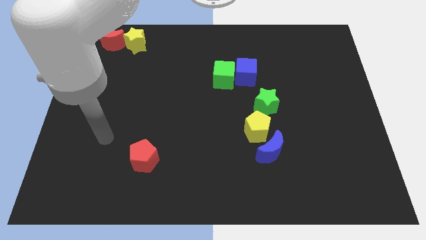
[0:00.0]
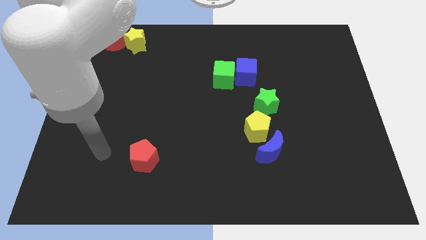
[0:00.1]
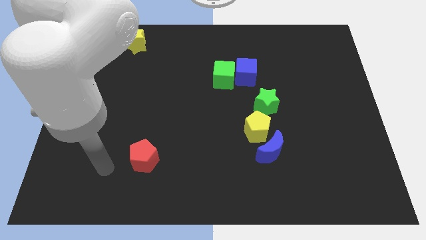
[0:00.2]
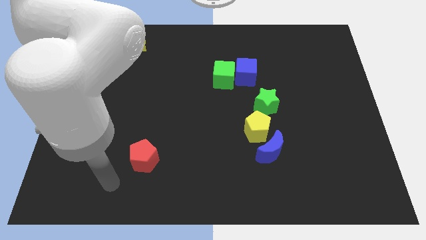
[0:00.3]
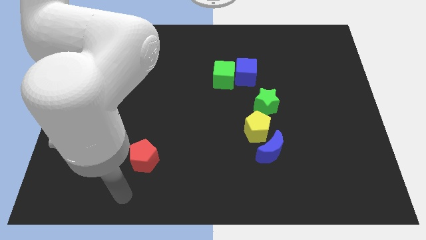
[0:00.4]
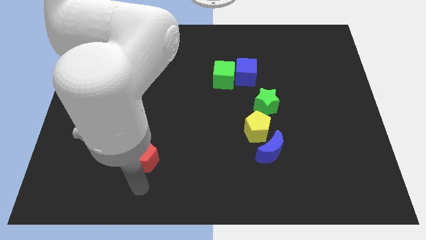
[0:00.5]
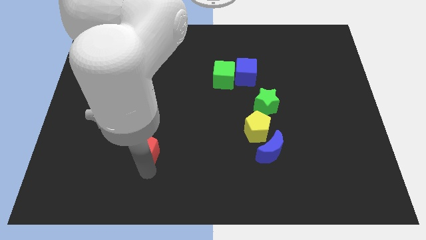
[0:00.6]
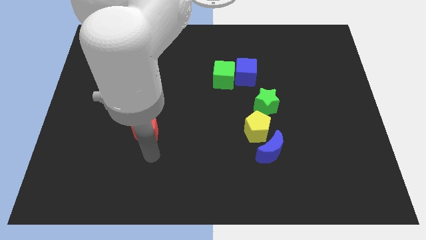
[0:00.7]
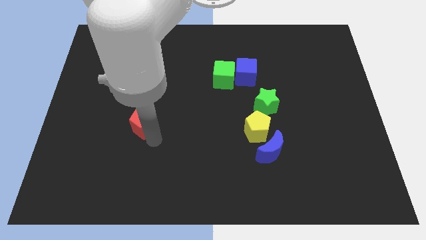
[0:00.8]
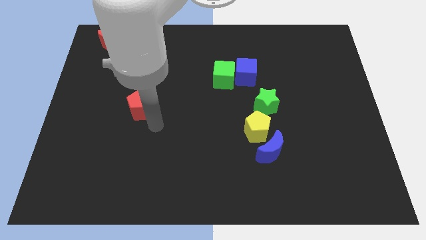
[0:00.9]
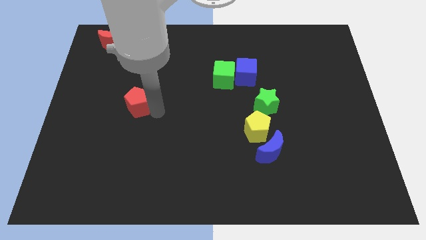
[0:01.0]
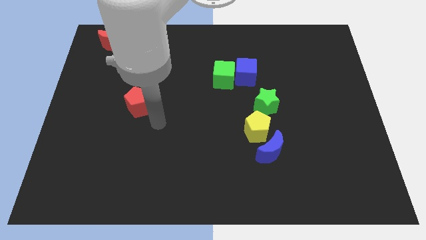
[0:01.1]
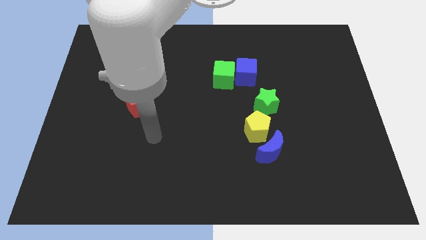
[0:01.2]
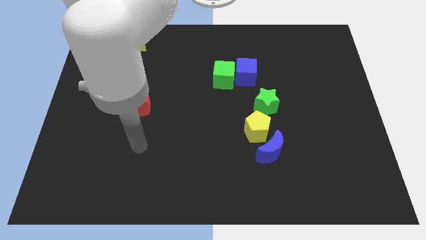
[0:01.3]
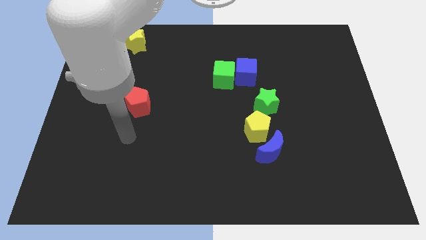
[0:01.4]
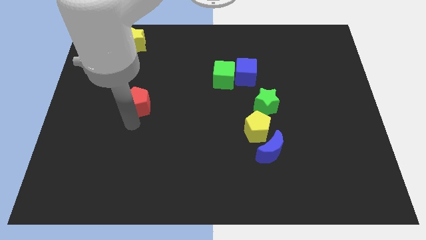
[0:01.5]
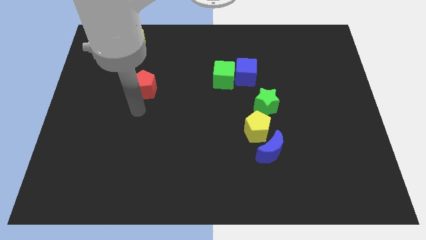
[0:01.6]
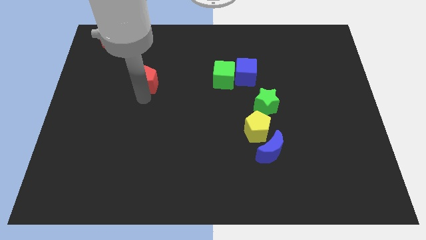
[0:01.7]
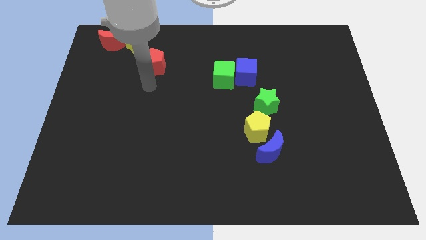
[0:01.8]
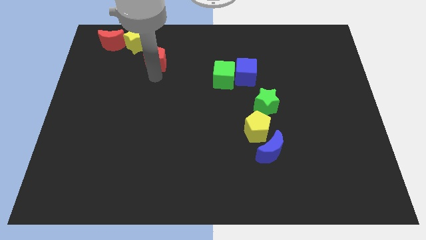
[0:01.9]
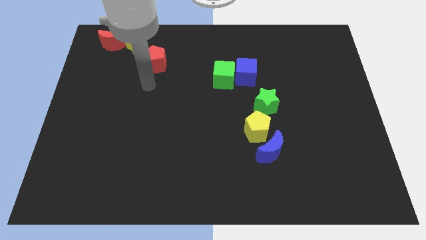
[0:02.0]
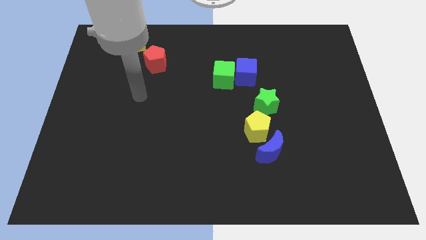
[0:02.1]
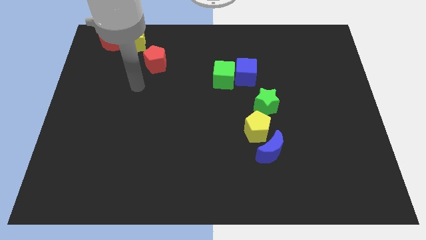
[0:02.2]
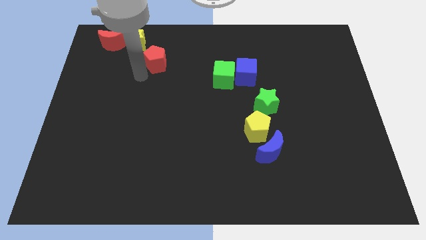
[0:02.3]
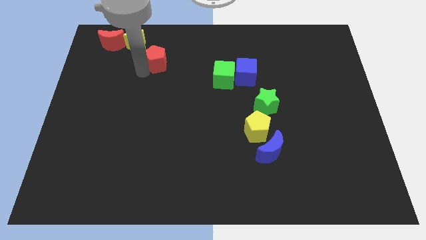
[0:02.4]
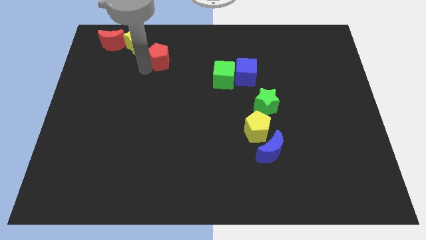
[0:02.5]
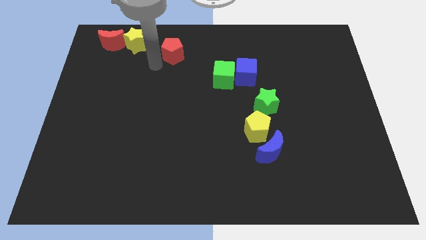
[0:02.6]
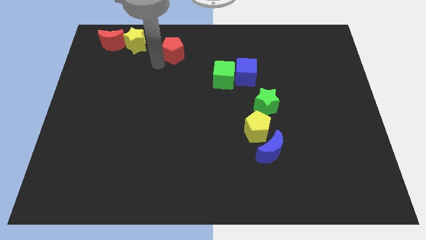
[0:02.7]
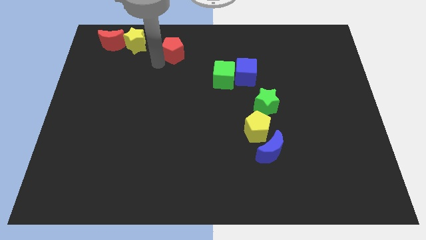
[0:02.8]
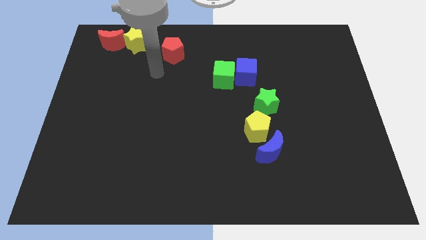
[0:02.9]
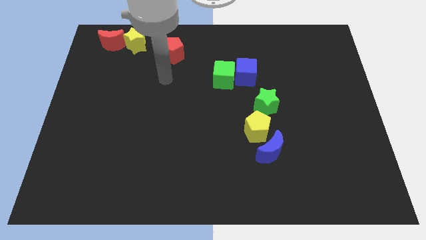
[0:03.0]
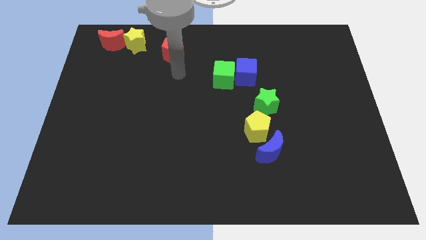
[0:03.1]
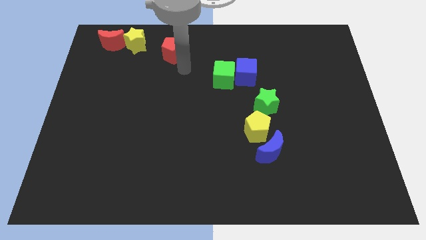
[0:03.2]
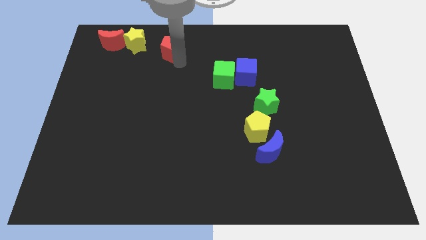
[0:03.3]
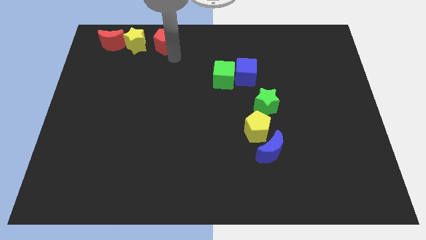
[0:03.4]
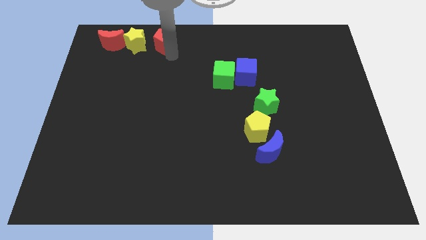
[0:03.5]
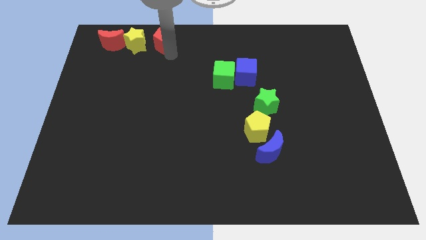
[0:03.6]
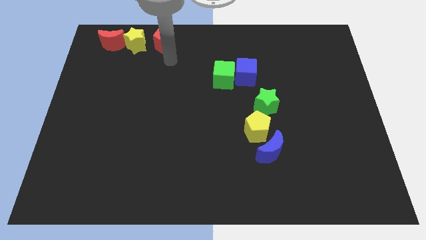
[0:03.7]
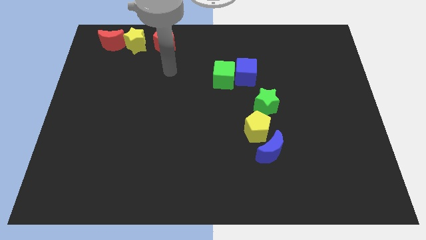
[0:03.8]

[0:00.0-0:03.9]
move red pentagon to the right of yellow star

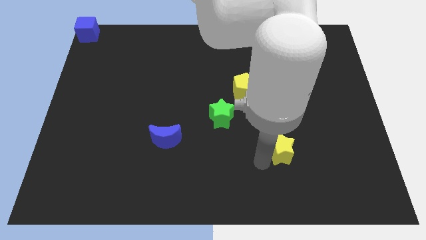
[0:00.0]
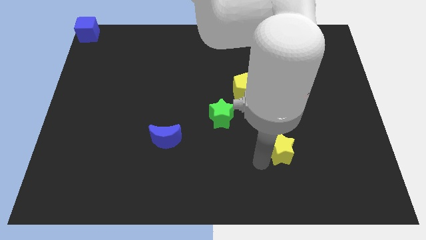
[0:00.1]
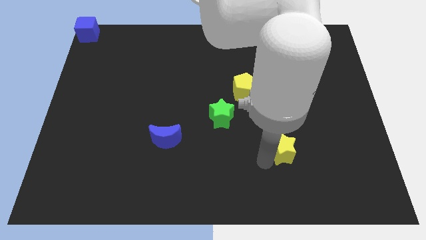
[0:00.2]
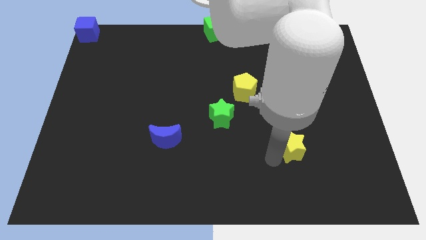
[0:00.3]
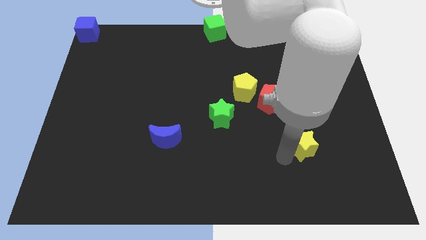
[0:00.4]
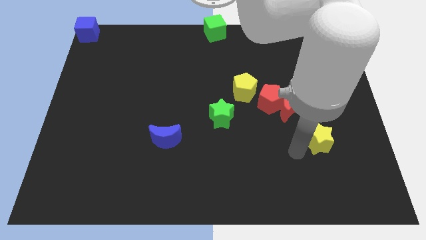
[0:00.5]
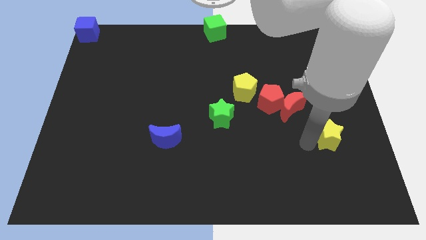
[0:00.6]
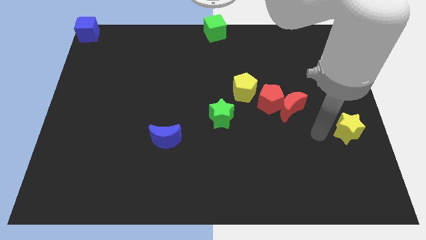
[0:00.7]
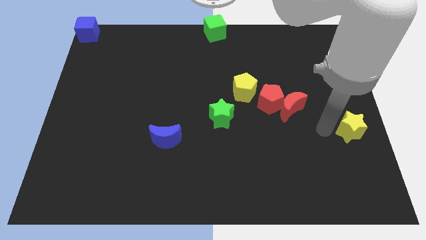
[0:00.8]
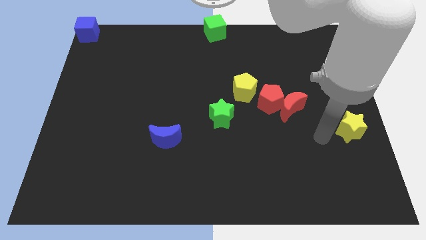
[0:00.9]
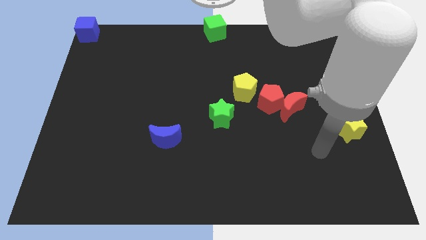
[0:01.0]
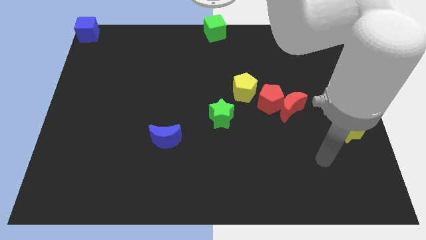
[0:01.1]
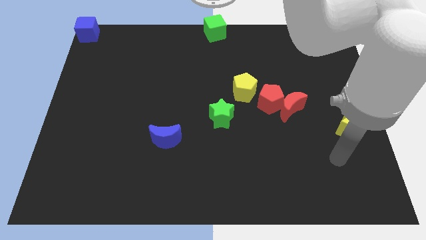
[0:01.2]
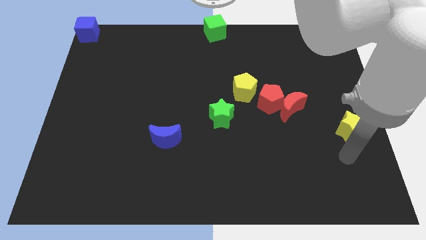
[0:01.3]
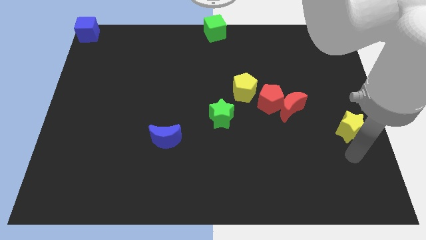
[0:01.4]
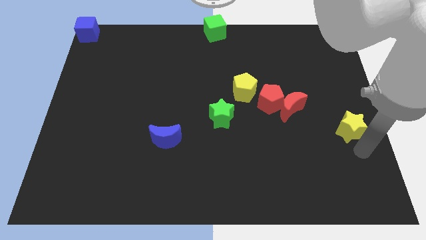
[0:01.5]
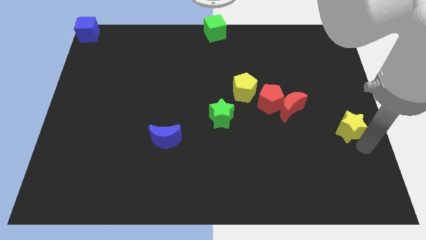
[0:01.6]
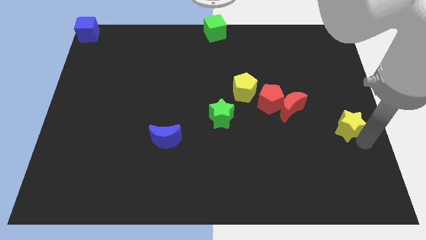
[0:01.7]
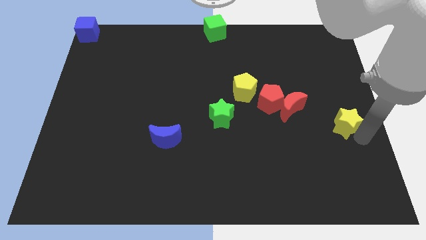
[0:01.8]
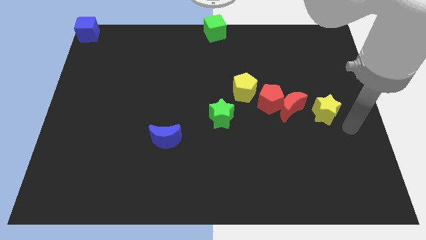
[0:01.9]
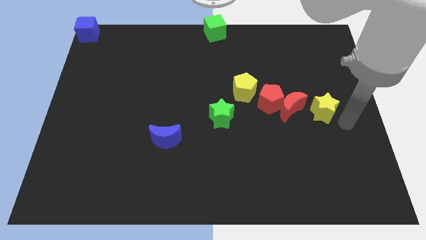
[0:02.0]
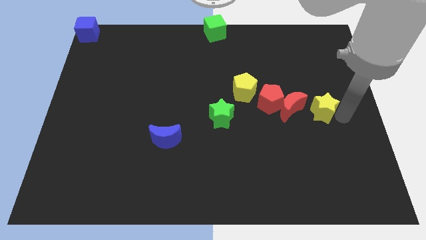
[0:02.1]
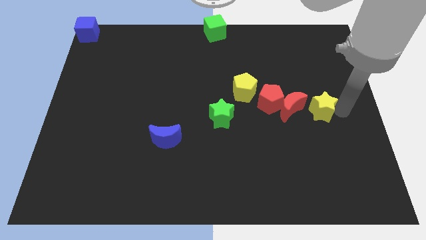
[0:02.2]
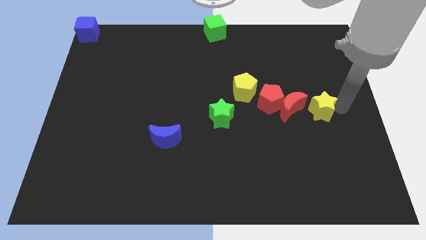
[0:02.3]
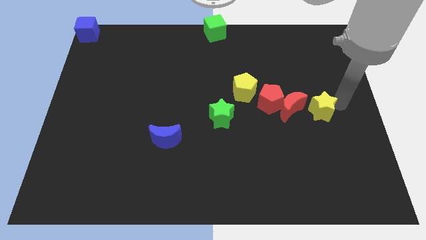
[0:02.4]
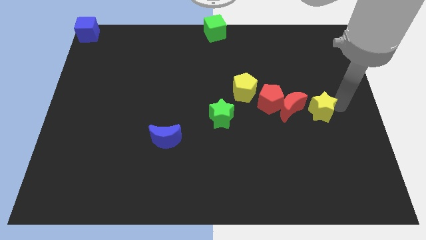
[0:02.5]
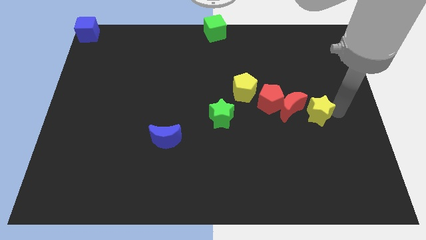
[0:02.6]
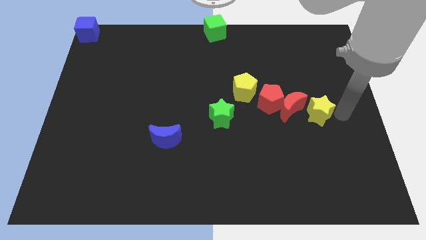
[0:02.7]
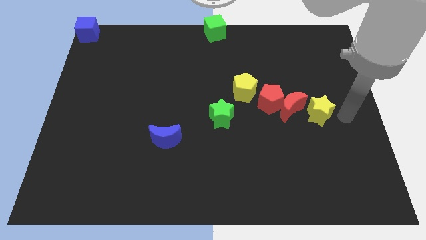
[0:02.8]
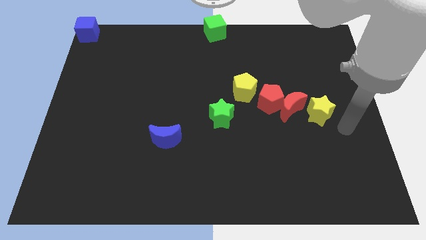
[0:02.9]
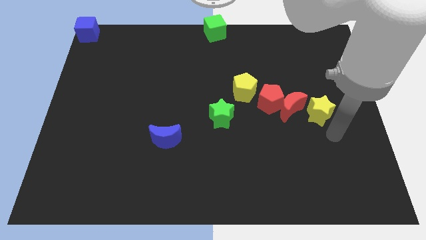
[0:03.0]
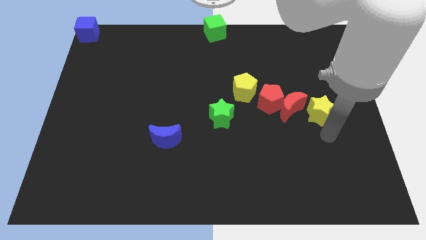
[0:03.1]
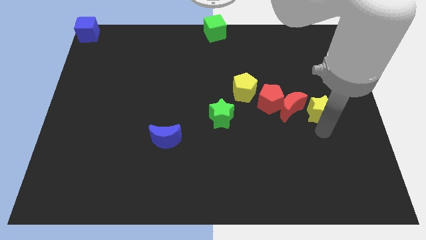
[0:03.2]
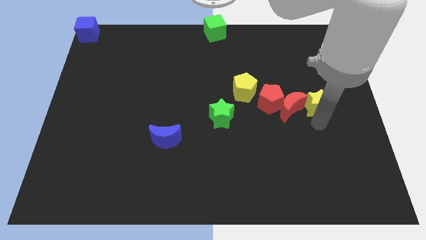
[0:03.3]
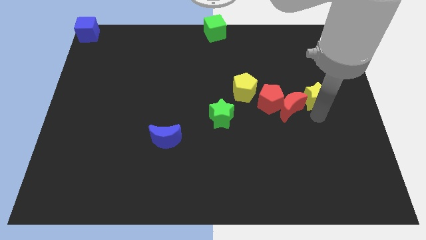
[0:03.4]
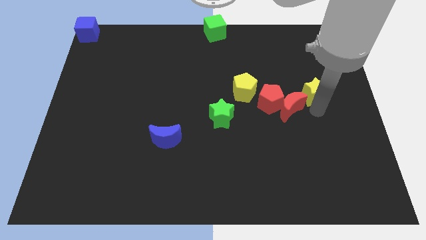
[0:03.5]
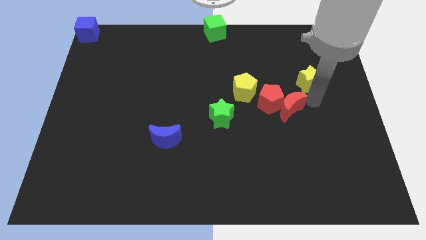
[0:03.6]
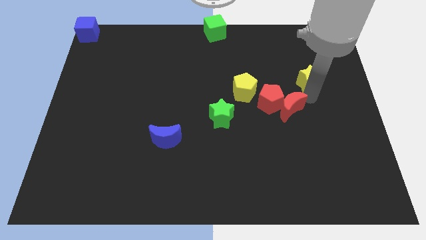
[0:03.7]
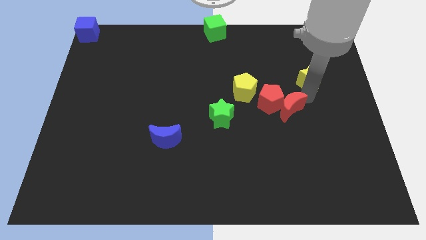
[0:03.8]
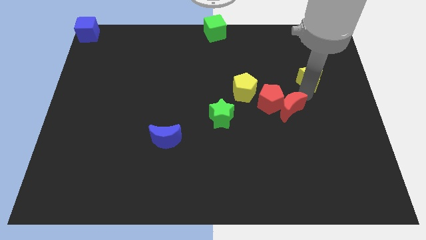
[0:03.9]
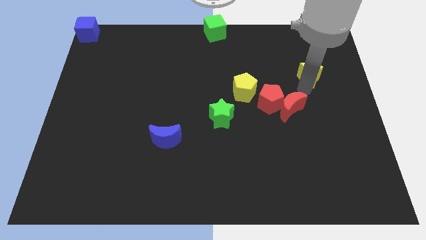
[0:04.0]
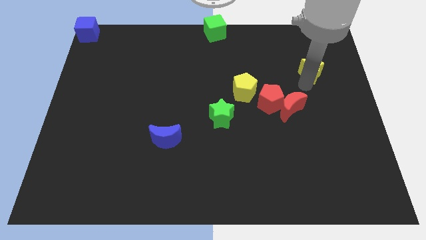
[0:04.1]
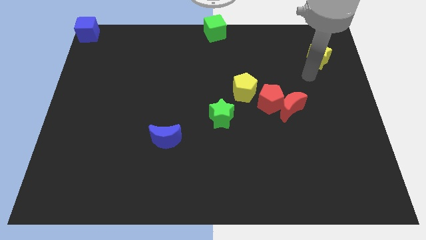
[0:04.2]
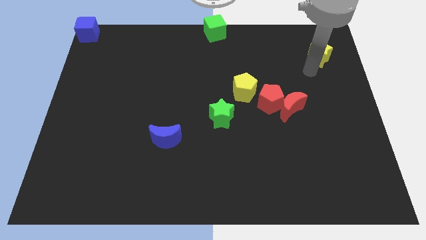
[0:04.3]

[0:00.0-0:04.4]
place the yellow star above the red moon

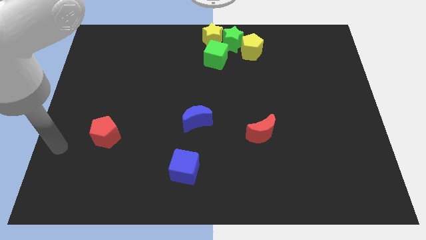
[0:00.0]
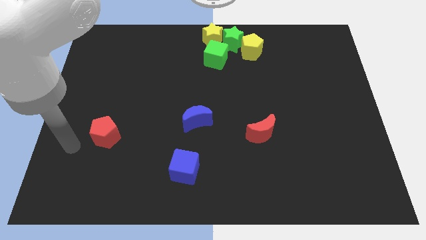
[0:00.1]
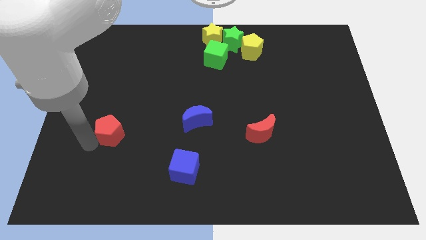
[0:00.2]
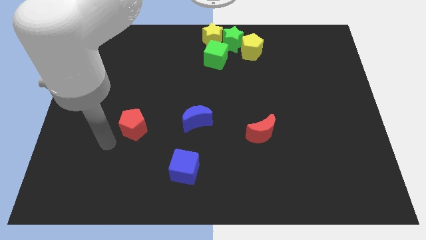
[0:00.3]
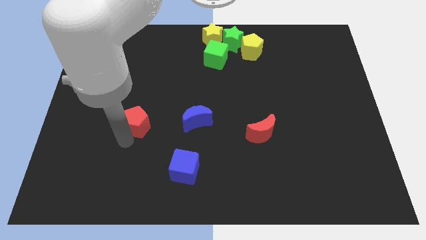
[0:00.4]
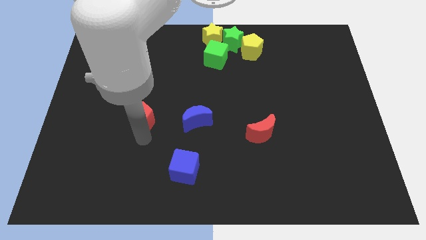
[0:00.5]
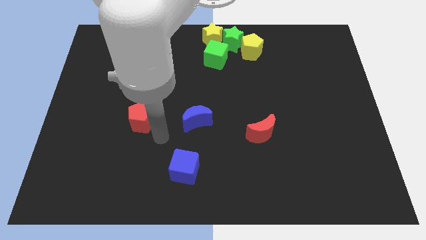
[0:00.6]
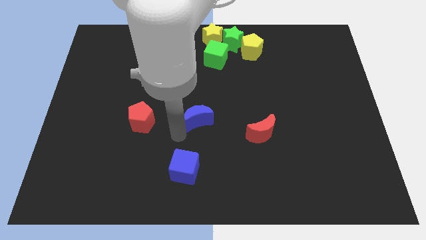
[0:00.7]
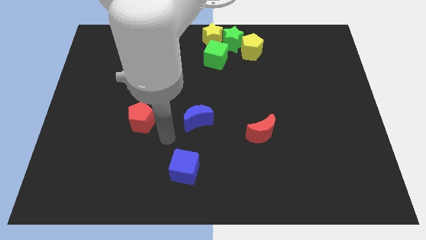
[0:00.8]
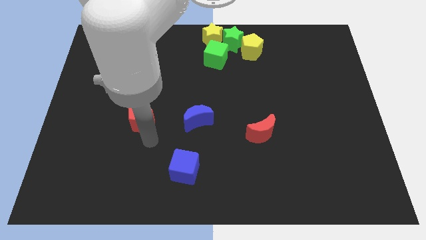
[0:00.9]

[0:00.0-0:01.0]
place the yellow pentagon to the left of the blue crescent
